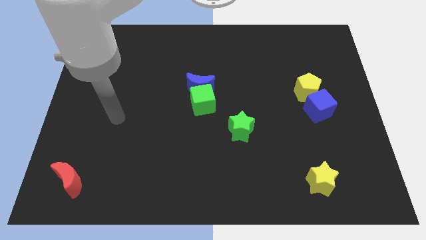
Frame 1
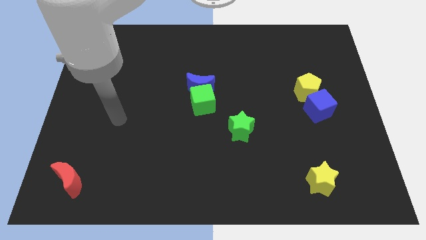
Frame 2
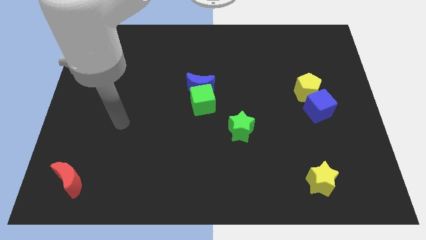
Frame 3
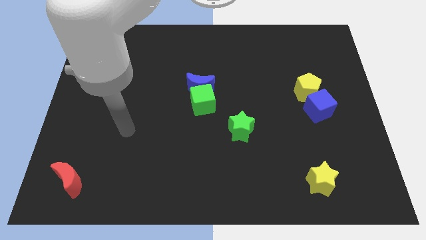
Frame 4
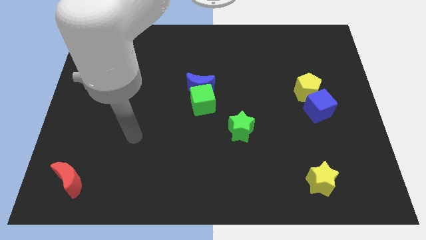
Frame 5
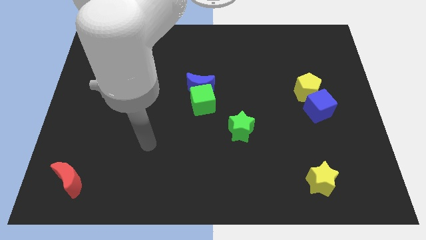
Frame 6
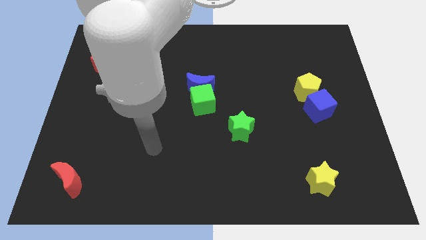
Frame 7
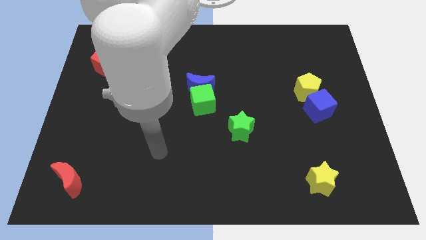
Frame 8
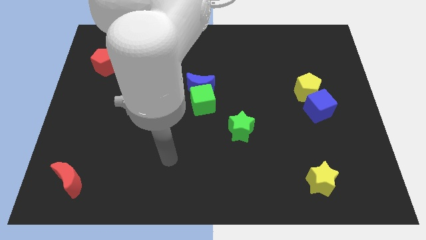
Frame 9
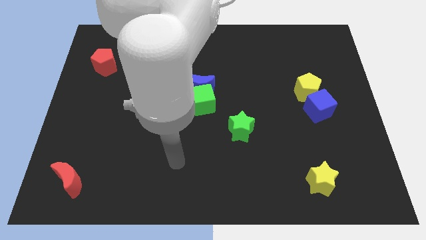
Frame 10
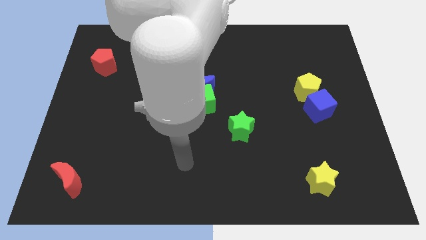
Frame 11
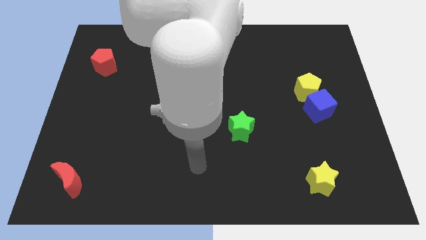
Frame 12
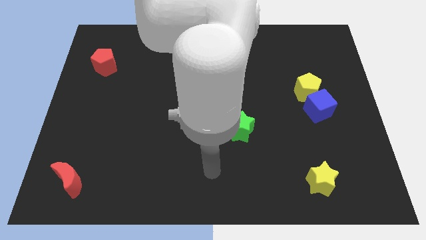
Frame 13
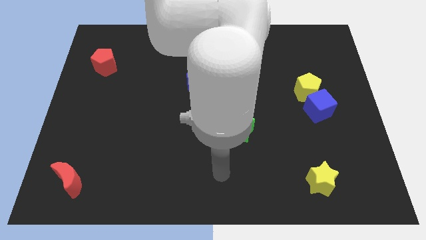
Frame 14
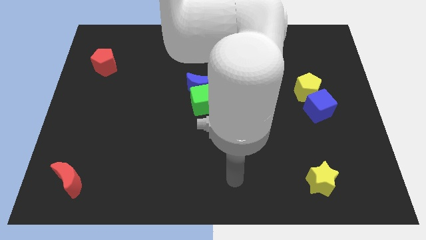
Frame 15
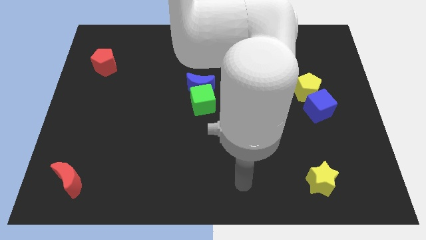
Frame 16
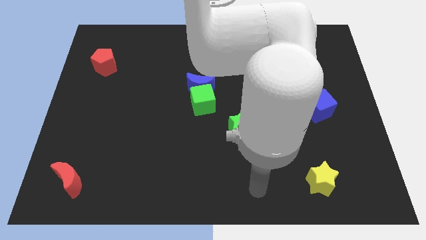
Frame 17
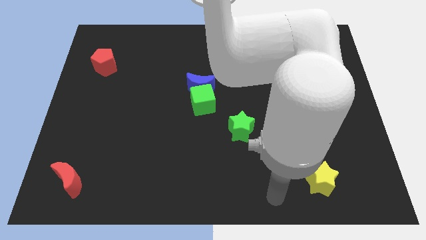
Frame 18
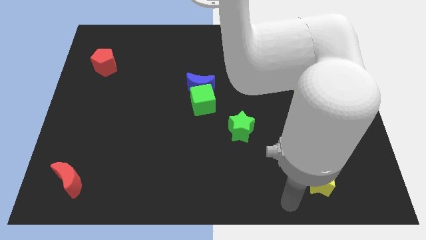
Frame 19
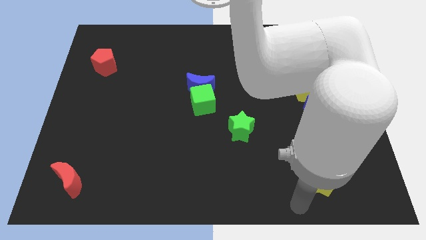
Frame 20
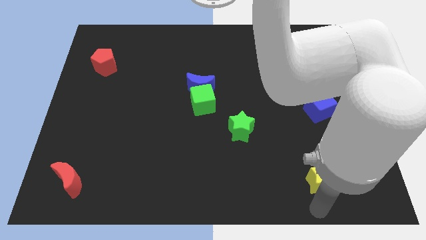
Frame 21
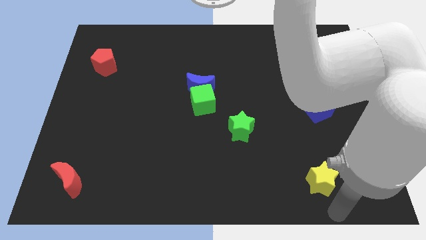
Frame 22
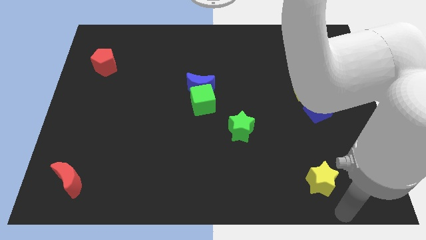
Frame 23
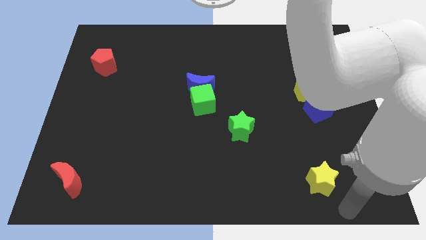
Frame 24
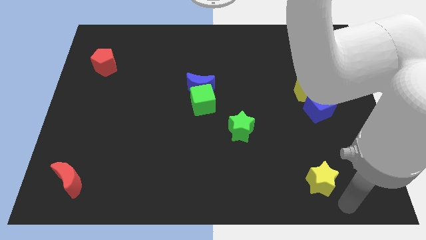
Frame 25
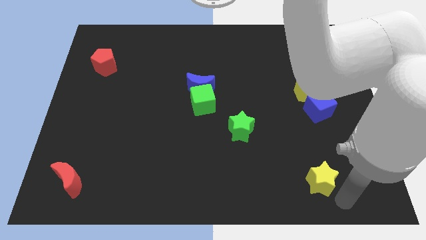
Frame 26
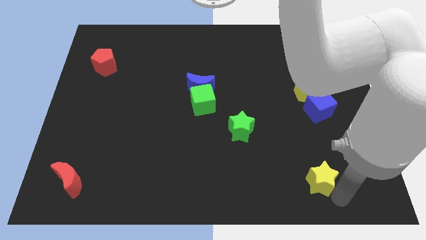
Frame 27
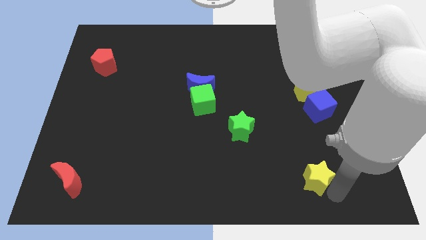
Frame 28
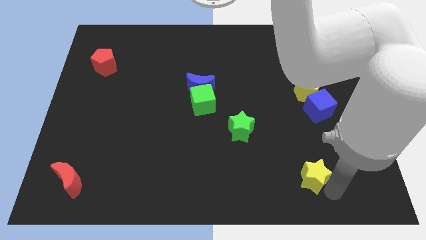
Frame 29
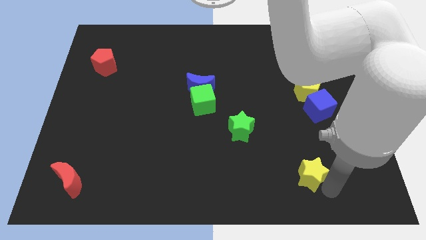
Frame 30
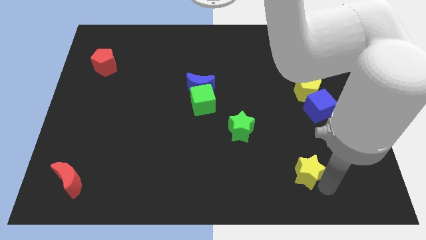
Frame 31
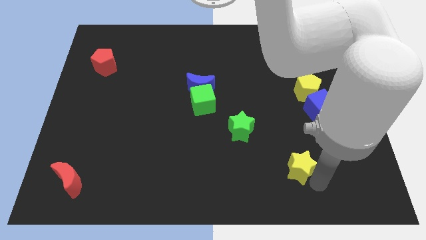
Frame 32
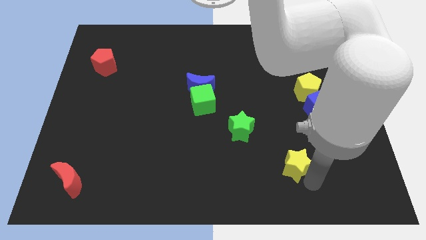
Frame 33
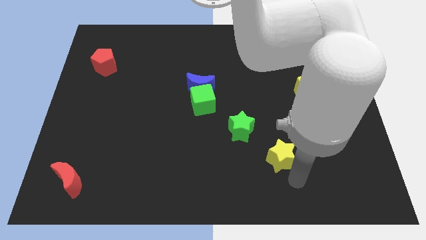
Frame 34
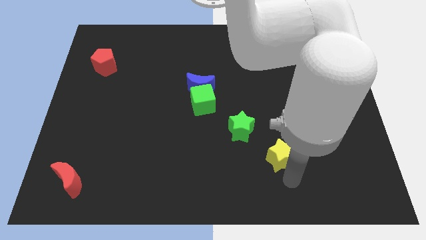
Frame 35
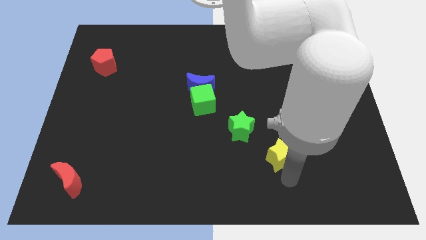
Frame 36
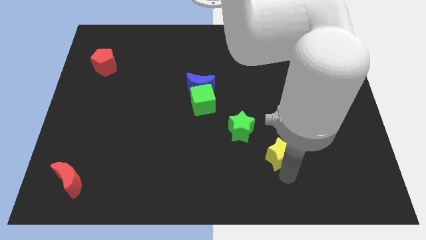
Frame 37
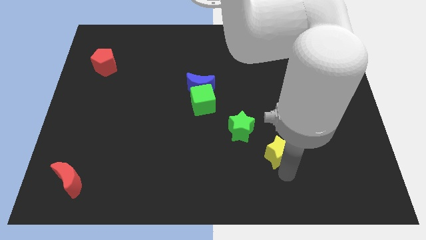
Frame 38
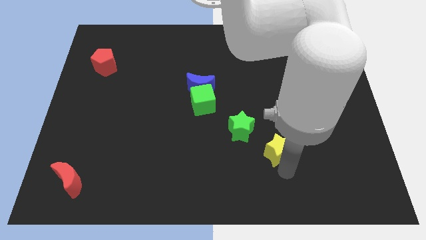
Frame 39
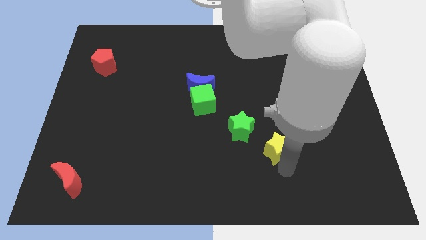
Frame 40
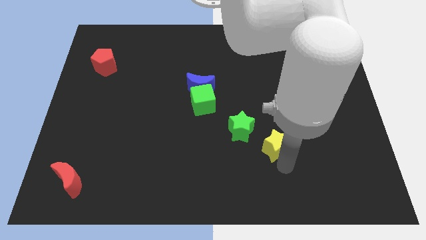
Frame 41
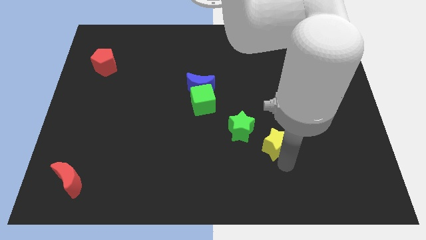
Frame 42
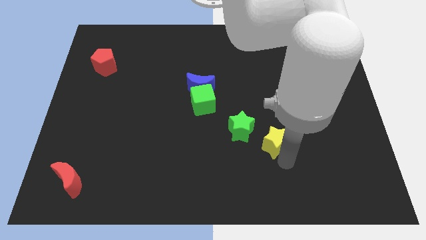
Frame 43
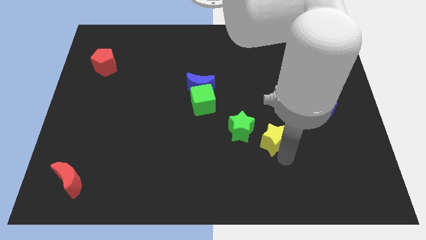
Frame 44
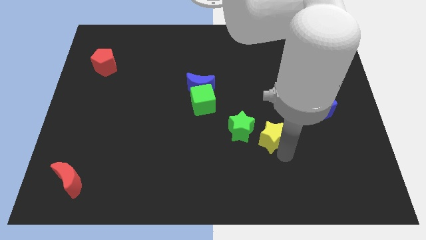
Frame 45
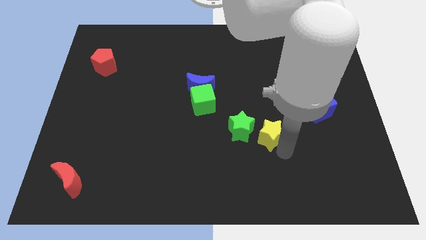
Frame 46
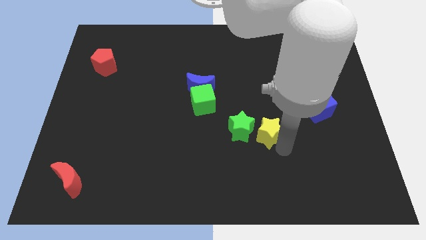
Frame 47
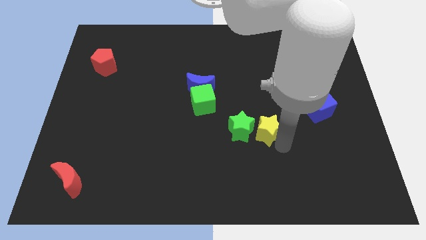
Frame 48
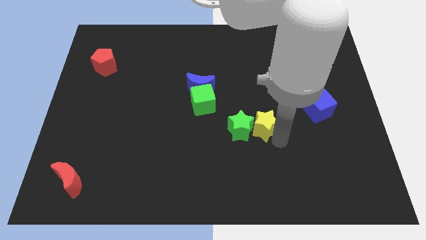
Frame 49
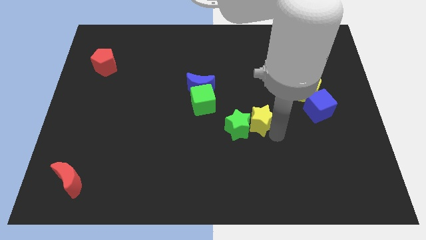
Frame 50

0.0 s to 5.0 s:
put the yellow star close to the green star

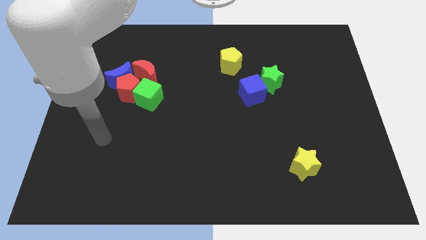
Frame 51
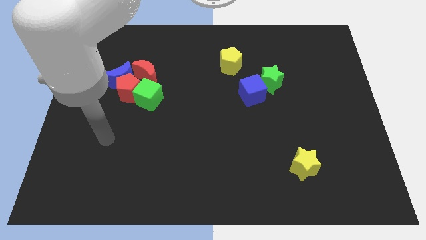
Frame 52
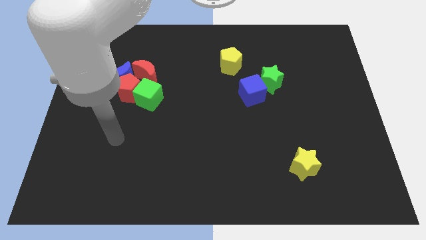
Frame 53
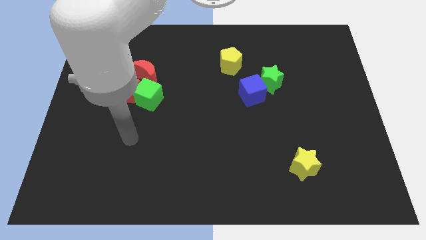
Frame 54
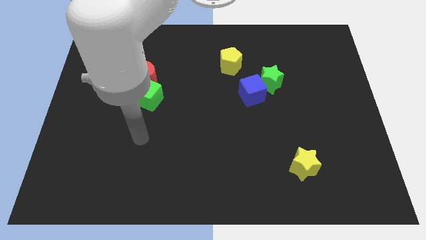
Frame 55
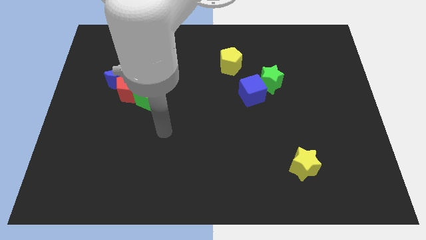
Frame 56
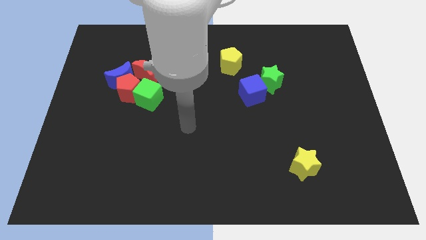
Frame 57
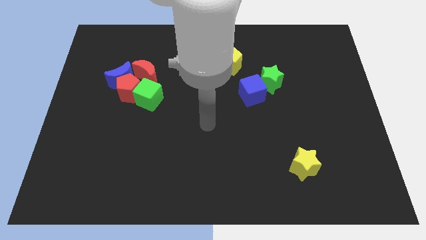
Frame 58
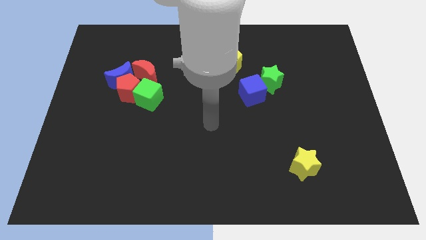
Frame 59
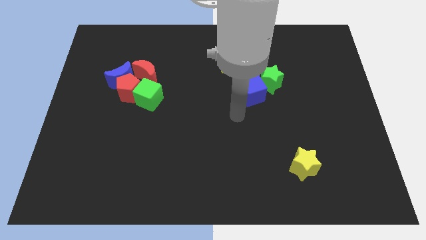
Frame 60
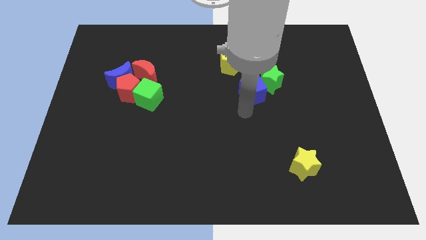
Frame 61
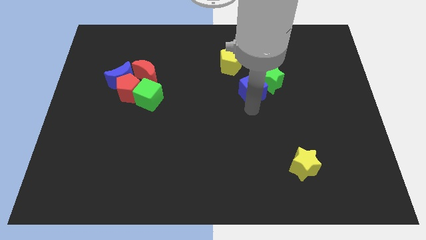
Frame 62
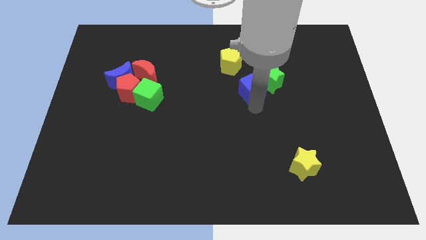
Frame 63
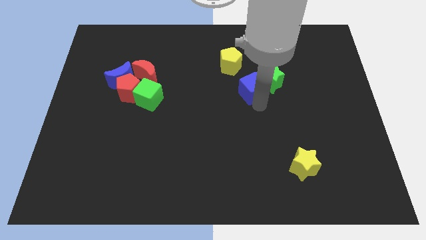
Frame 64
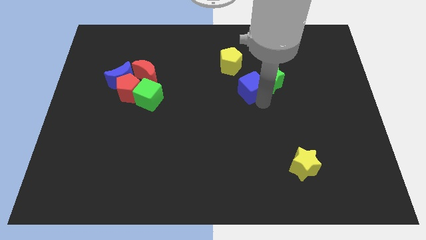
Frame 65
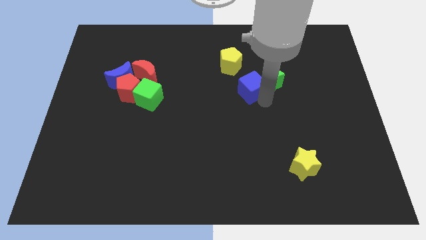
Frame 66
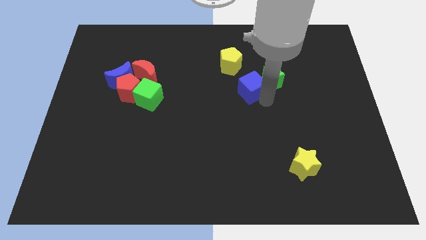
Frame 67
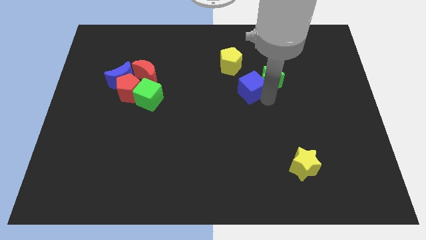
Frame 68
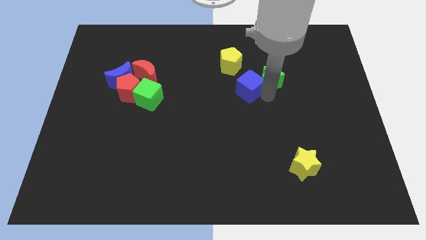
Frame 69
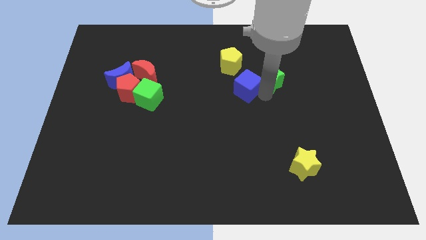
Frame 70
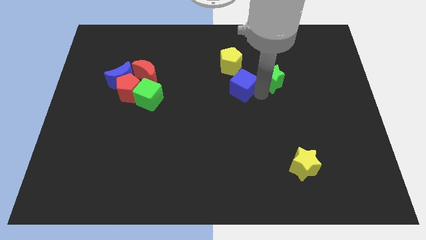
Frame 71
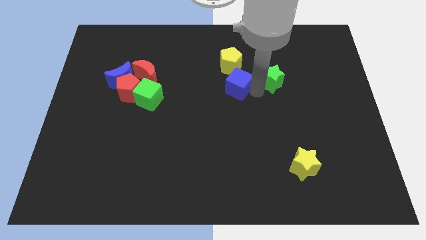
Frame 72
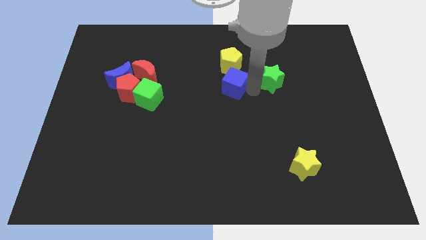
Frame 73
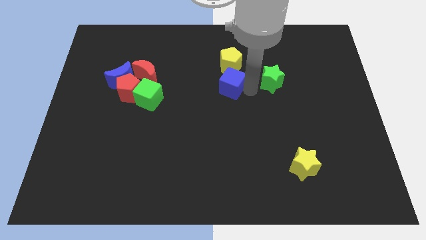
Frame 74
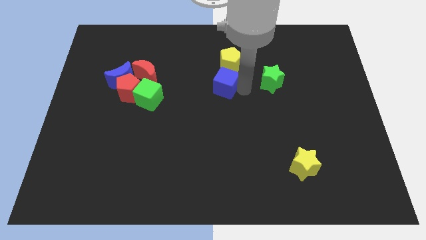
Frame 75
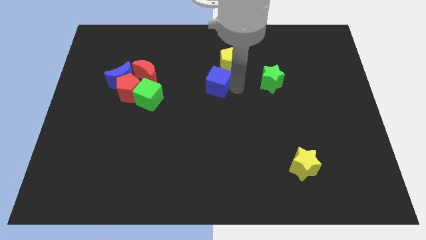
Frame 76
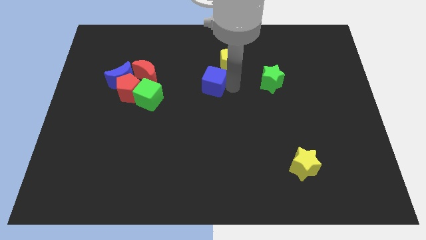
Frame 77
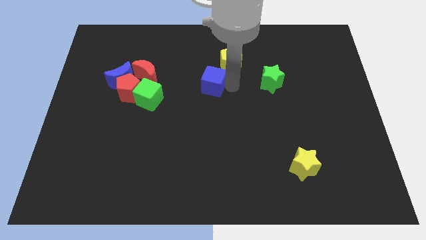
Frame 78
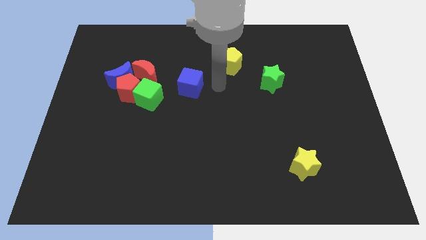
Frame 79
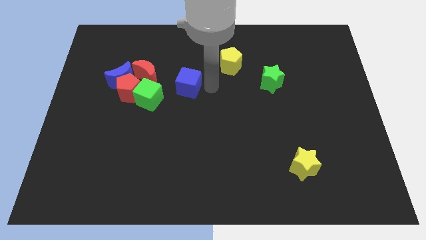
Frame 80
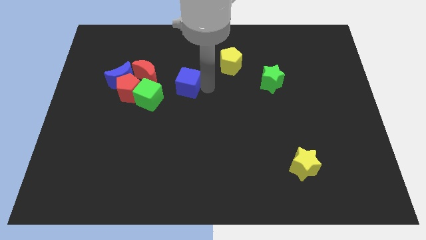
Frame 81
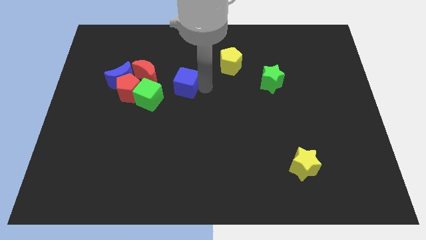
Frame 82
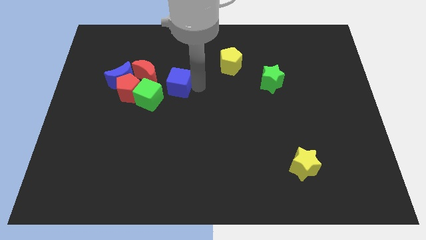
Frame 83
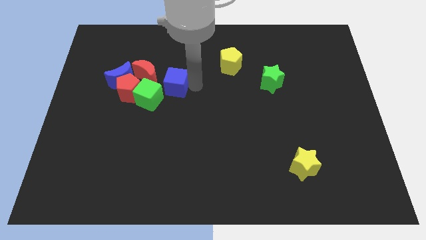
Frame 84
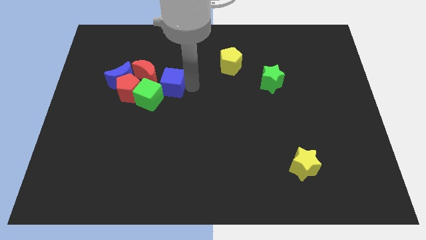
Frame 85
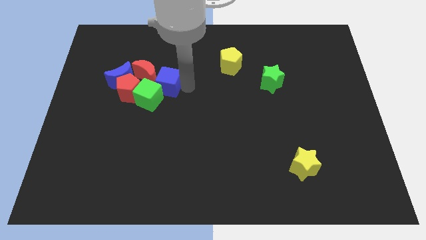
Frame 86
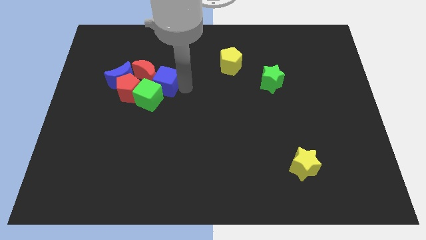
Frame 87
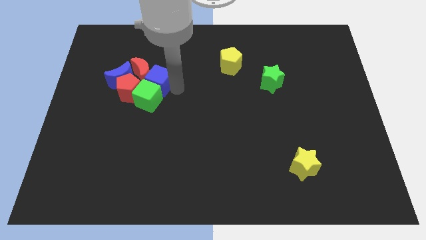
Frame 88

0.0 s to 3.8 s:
push the blue cube towards the red moon
